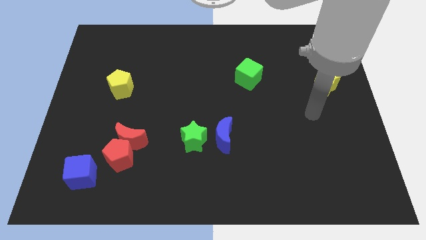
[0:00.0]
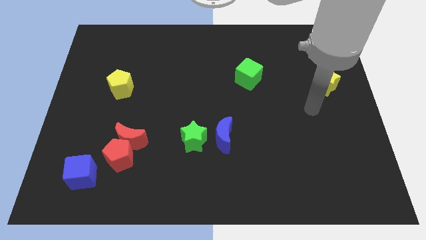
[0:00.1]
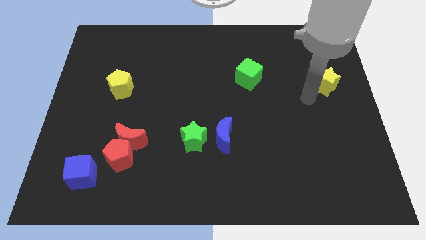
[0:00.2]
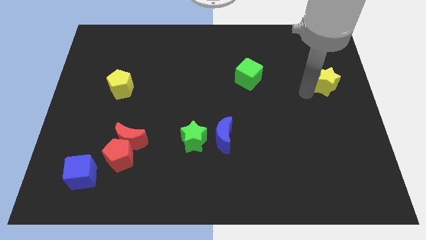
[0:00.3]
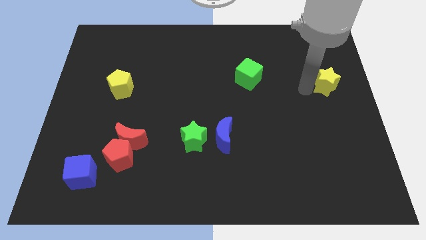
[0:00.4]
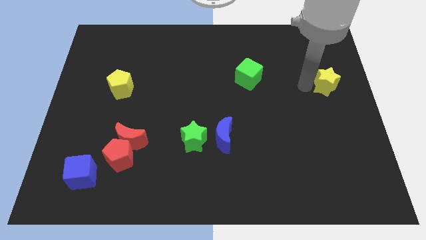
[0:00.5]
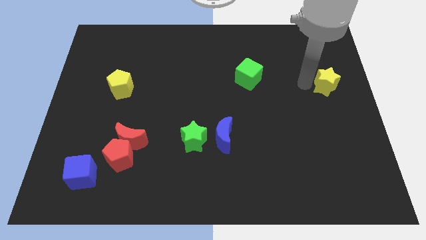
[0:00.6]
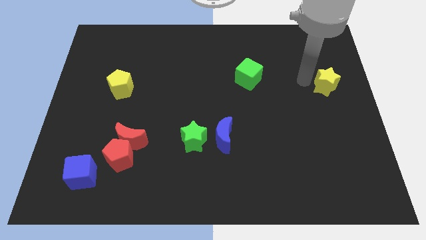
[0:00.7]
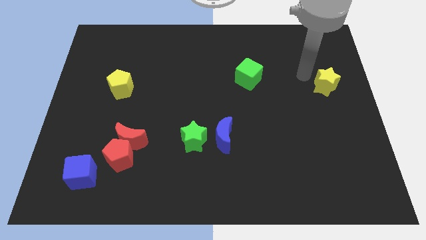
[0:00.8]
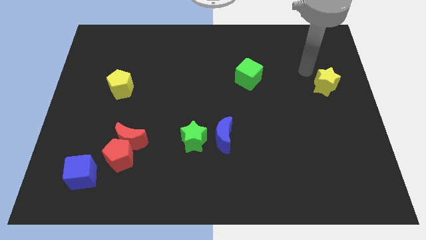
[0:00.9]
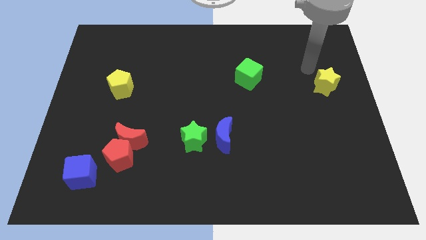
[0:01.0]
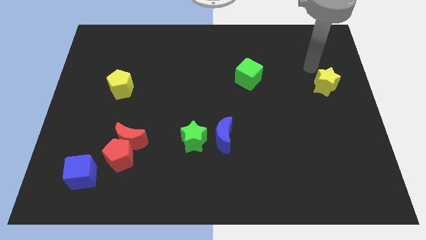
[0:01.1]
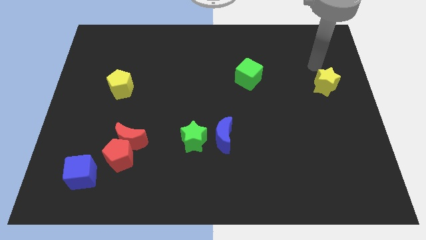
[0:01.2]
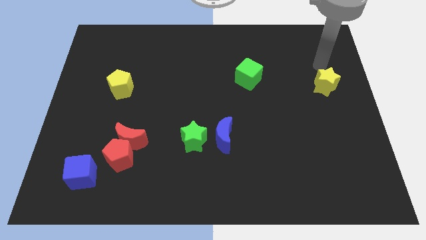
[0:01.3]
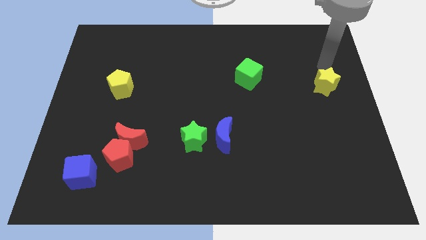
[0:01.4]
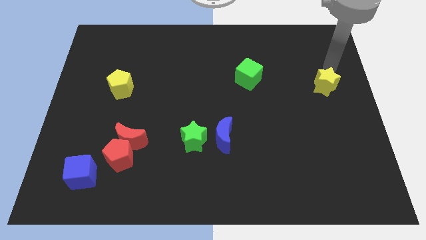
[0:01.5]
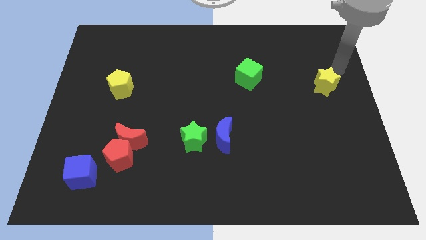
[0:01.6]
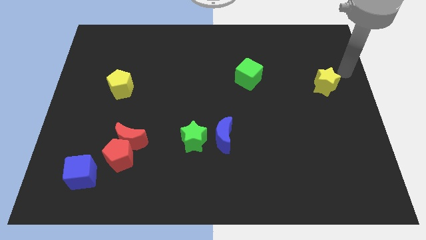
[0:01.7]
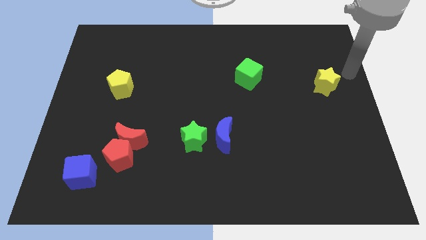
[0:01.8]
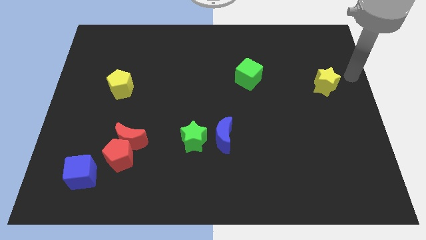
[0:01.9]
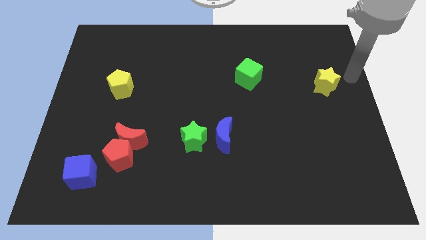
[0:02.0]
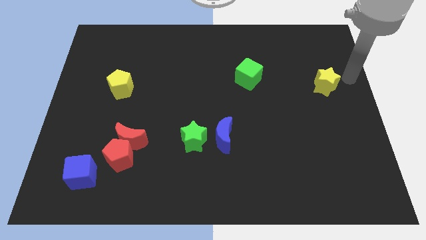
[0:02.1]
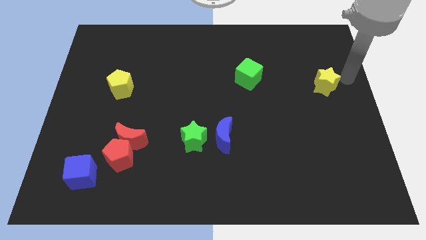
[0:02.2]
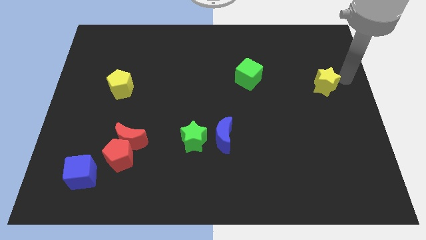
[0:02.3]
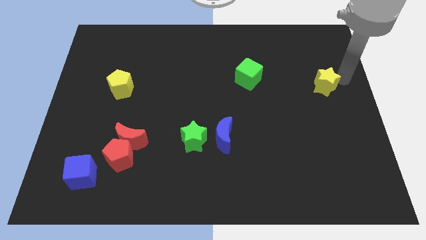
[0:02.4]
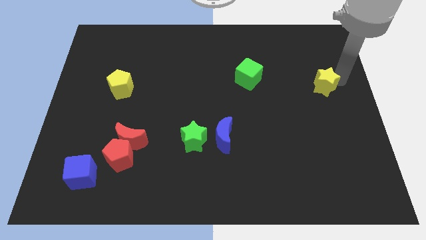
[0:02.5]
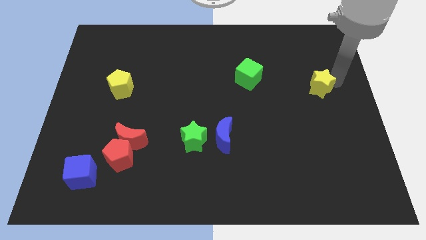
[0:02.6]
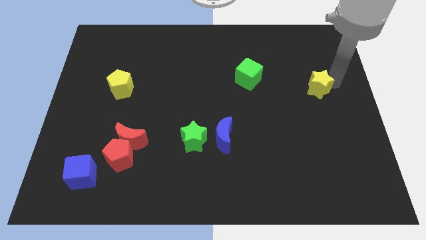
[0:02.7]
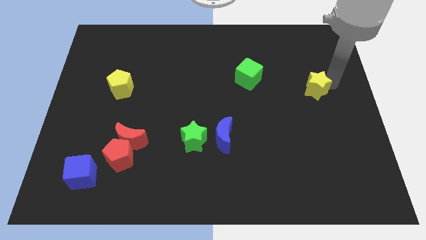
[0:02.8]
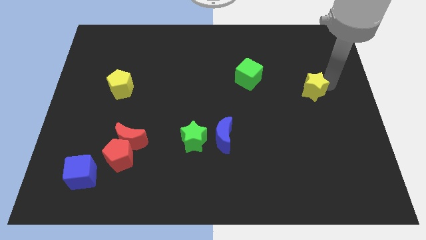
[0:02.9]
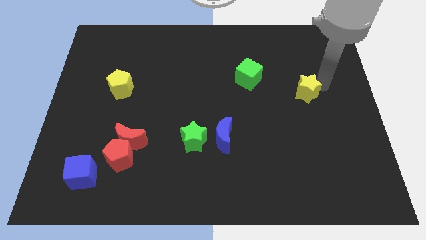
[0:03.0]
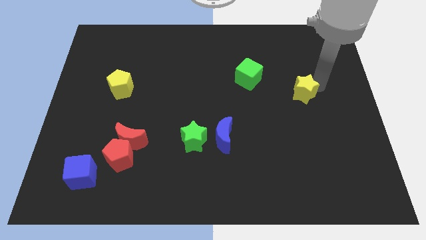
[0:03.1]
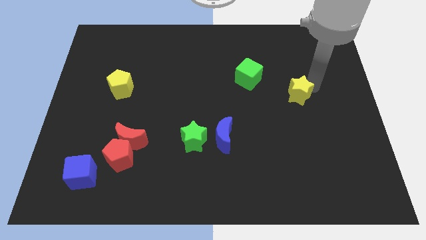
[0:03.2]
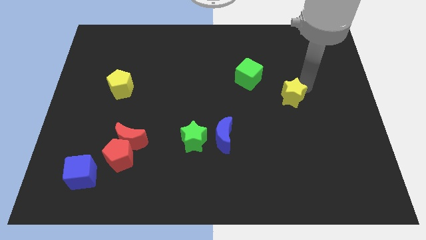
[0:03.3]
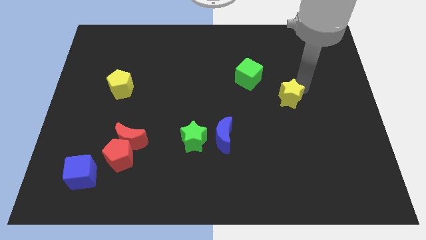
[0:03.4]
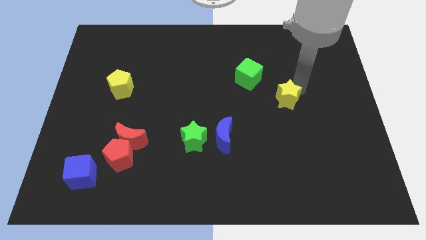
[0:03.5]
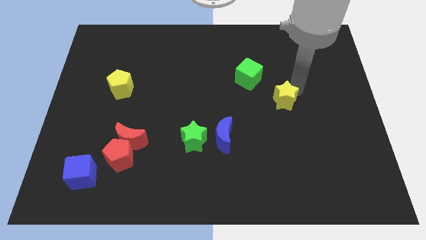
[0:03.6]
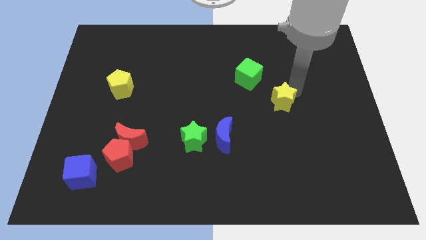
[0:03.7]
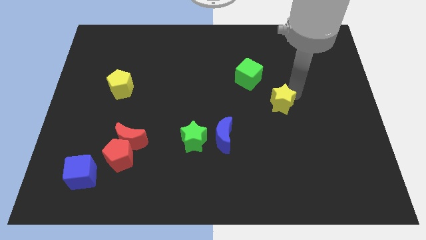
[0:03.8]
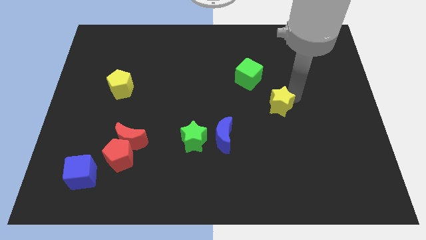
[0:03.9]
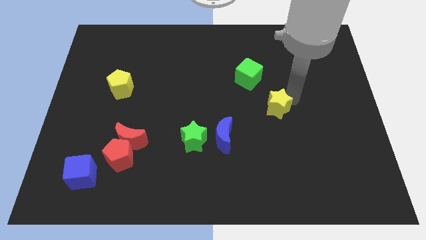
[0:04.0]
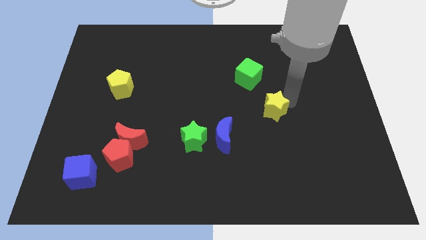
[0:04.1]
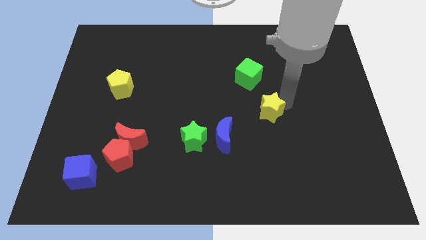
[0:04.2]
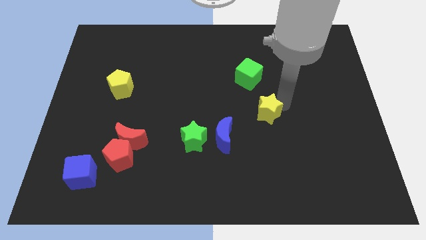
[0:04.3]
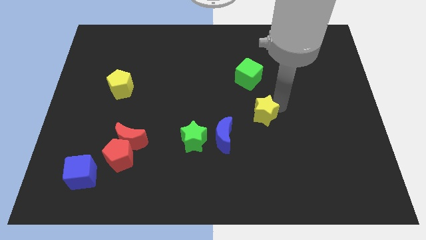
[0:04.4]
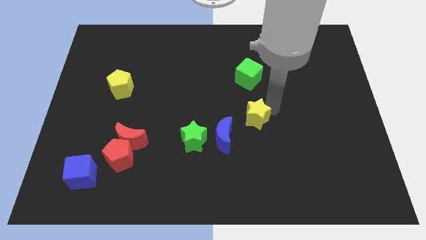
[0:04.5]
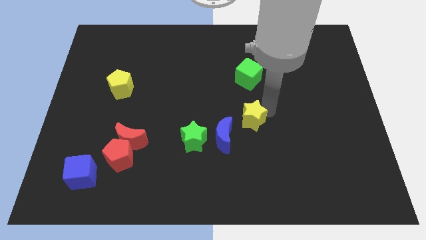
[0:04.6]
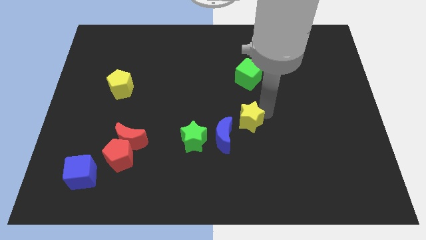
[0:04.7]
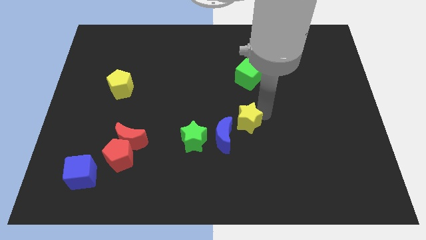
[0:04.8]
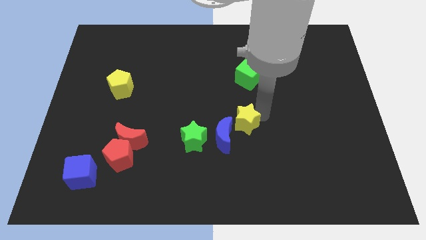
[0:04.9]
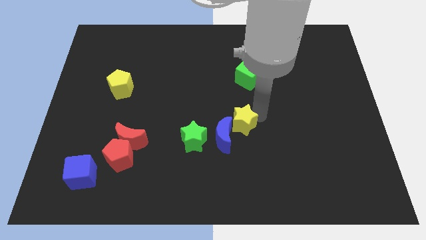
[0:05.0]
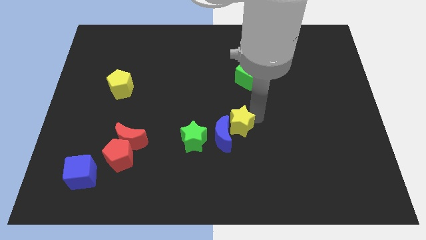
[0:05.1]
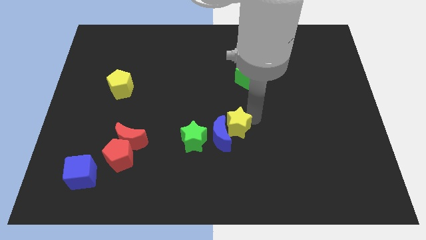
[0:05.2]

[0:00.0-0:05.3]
slide the yellow star next to the blue moon

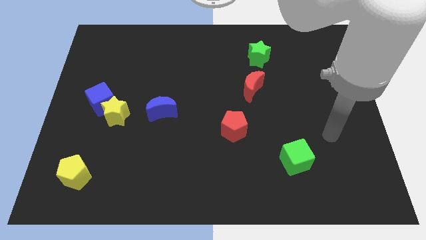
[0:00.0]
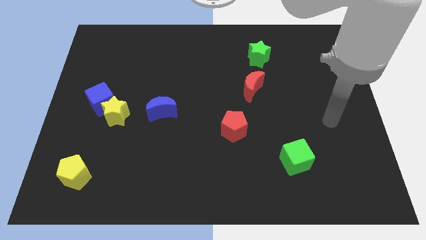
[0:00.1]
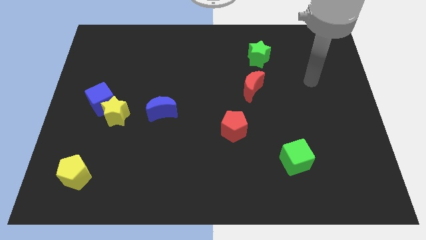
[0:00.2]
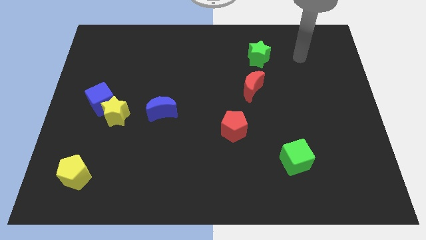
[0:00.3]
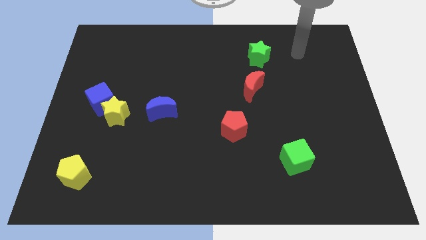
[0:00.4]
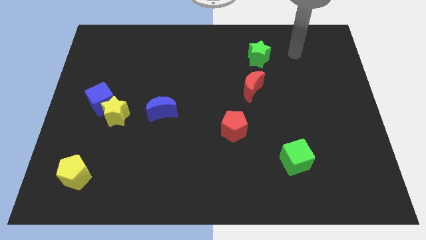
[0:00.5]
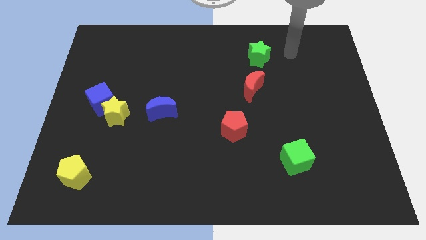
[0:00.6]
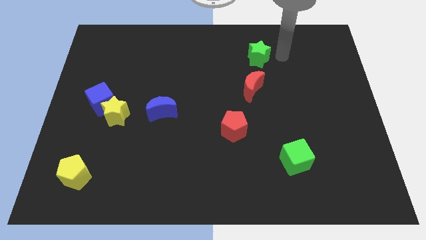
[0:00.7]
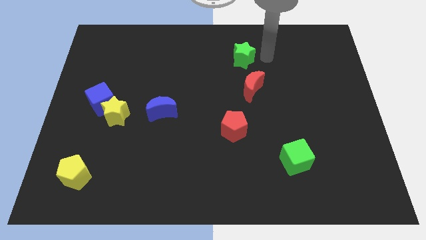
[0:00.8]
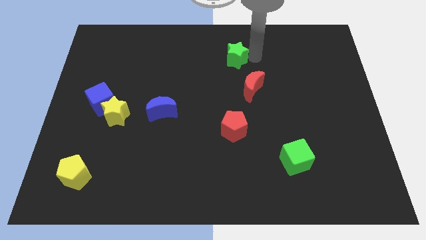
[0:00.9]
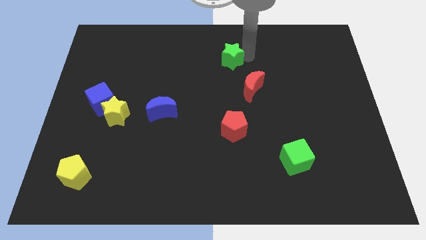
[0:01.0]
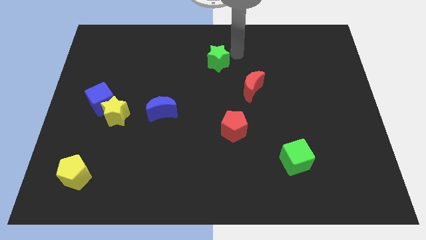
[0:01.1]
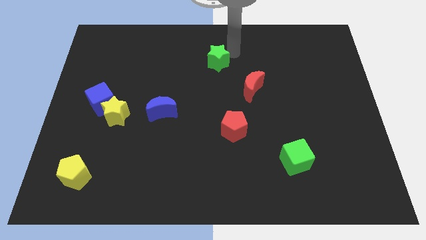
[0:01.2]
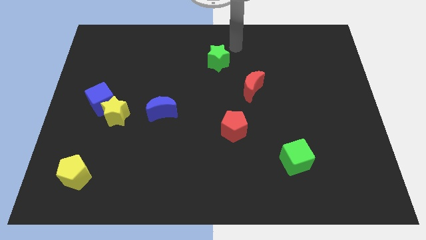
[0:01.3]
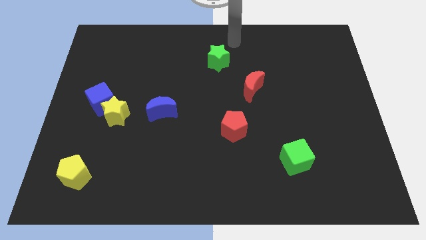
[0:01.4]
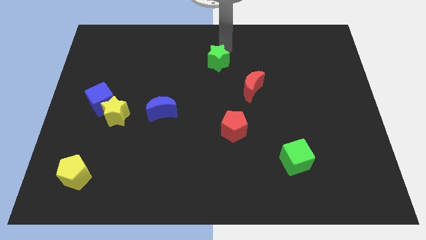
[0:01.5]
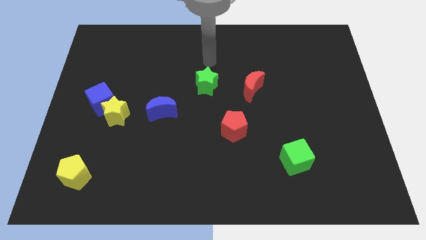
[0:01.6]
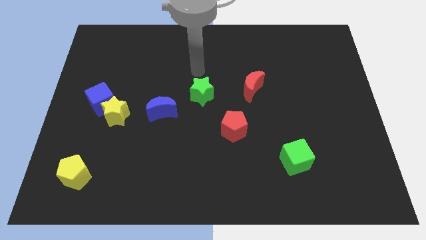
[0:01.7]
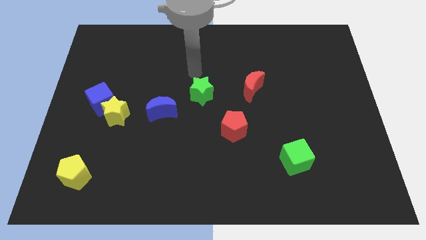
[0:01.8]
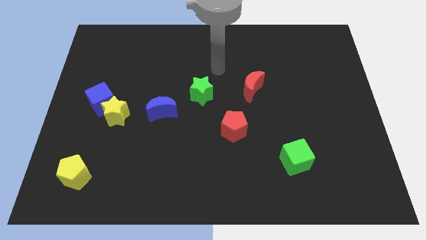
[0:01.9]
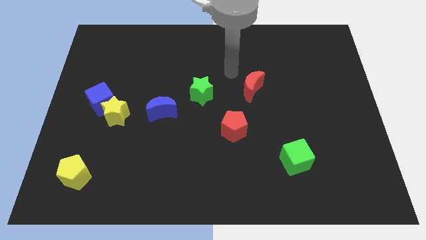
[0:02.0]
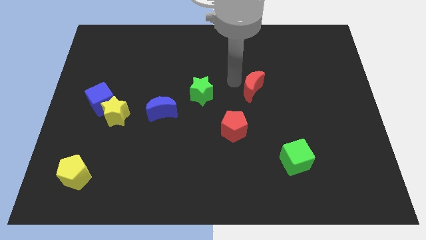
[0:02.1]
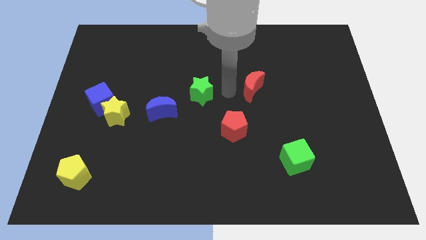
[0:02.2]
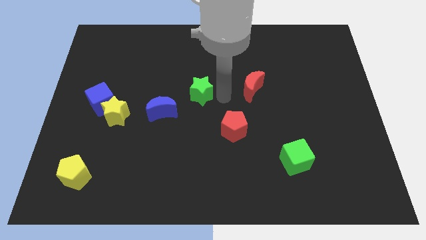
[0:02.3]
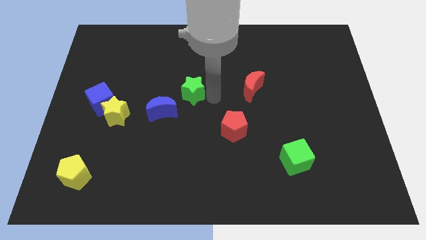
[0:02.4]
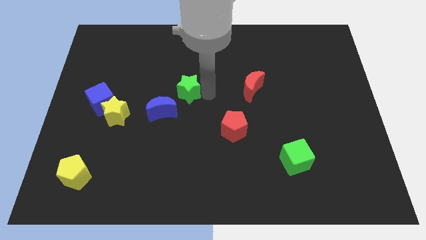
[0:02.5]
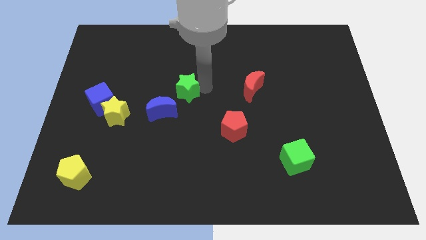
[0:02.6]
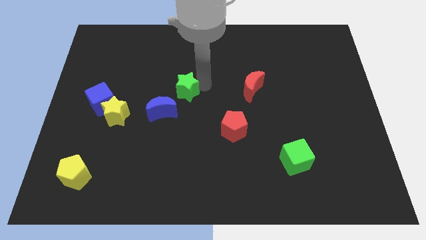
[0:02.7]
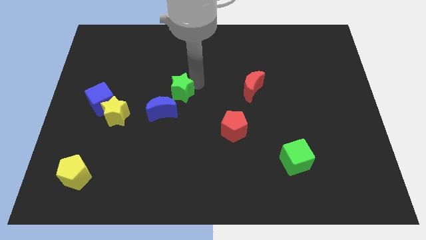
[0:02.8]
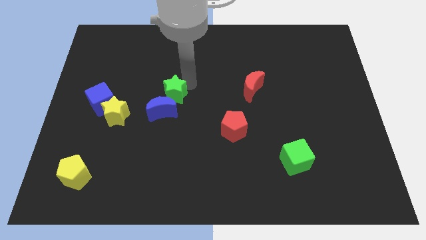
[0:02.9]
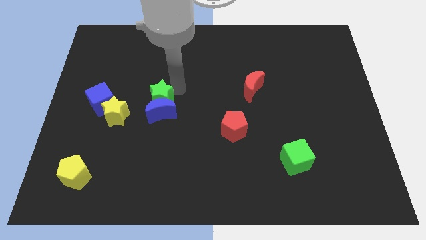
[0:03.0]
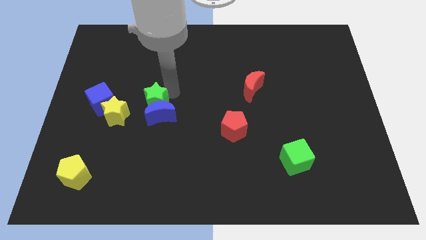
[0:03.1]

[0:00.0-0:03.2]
move the green star towards the blue moon

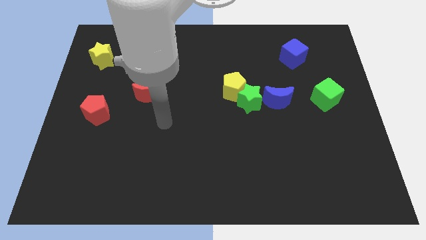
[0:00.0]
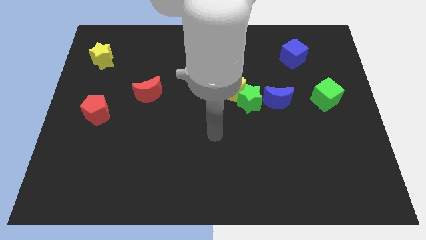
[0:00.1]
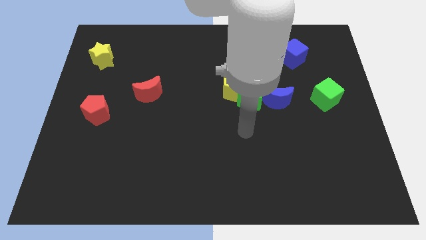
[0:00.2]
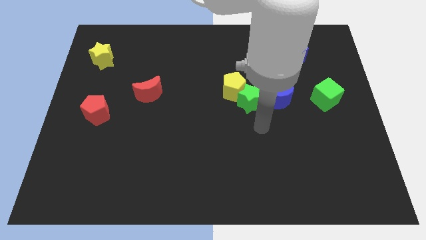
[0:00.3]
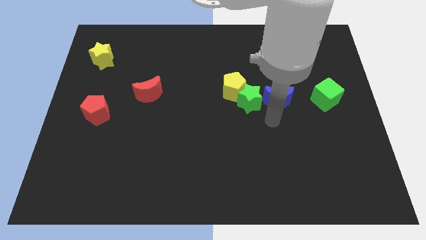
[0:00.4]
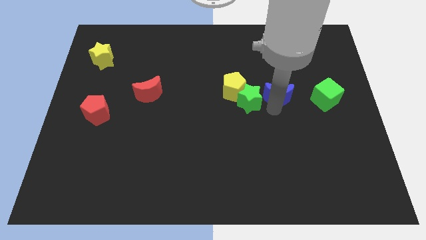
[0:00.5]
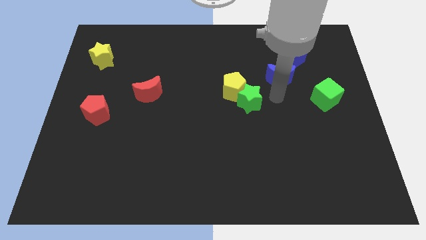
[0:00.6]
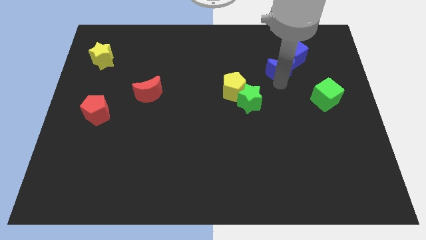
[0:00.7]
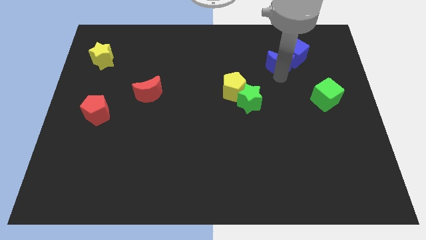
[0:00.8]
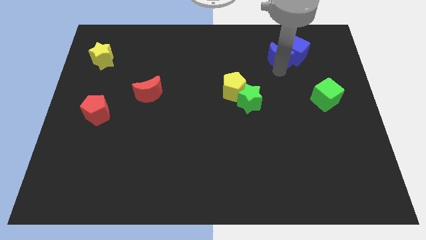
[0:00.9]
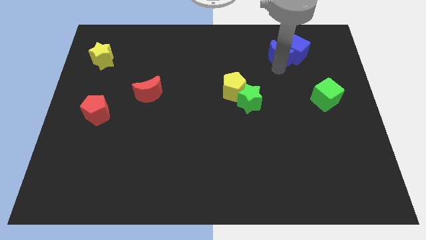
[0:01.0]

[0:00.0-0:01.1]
put the blue moon towards the blue cube
